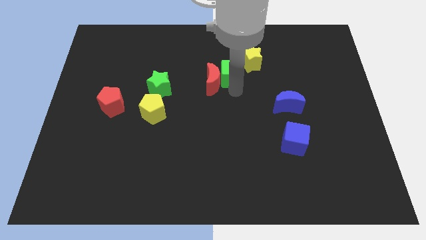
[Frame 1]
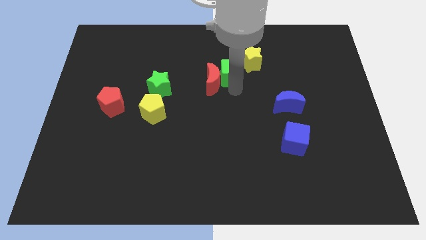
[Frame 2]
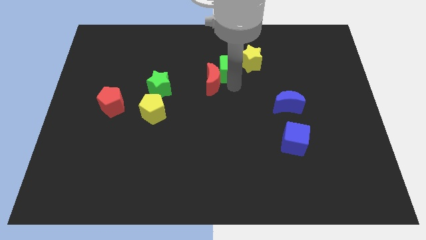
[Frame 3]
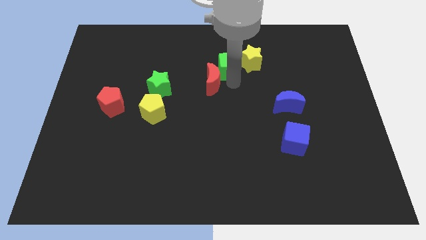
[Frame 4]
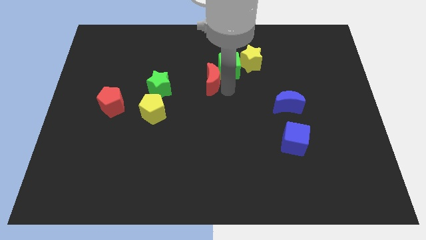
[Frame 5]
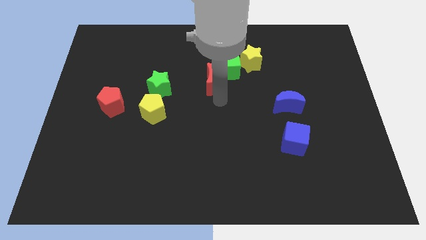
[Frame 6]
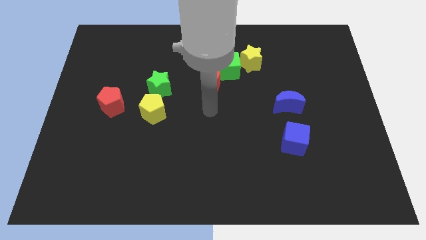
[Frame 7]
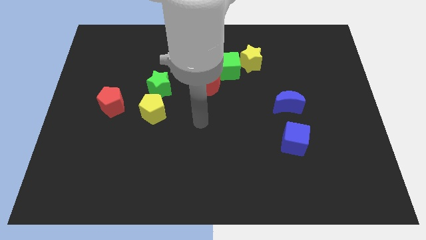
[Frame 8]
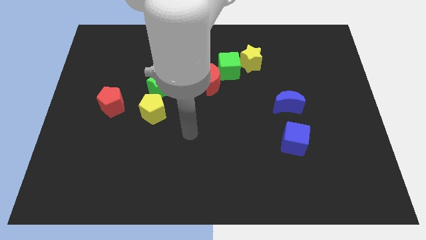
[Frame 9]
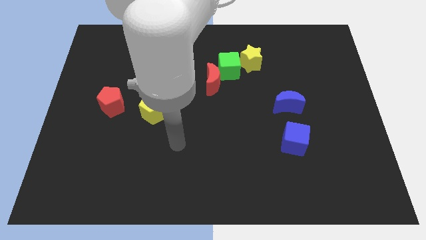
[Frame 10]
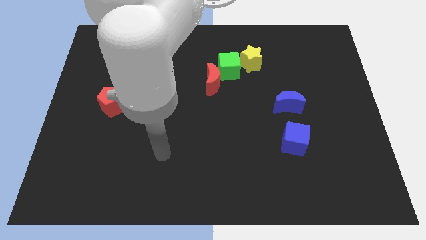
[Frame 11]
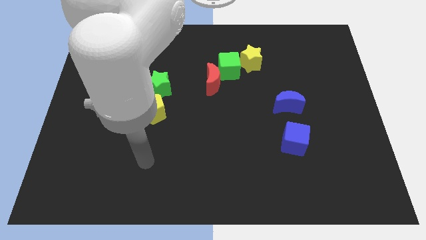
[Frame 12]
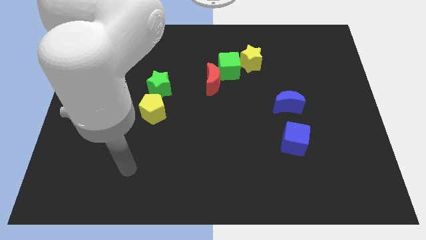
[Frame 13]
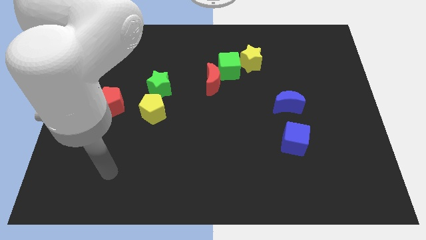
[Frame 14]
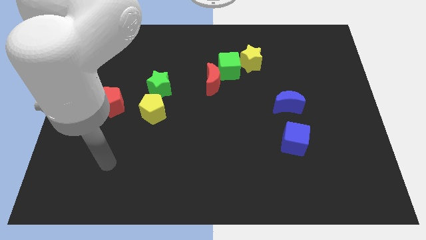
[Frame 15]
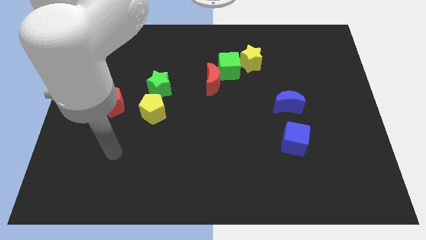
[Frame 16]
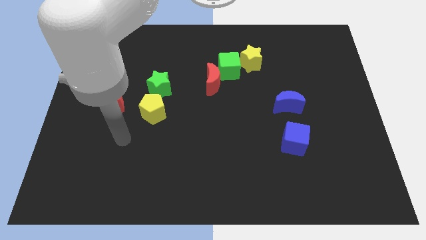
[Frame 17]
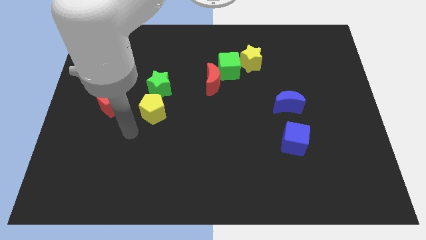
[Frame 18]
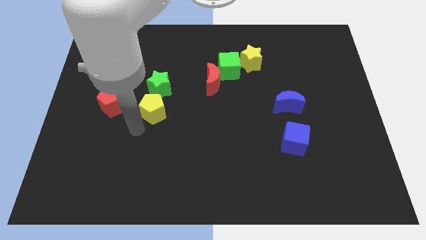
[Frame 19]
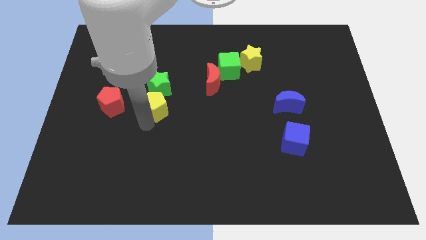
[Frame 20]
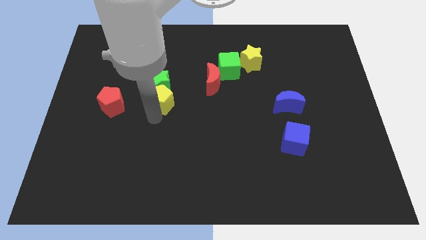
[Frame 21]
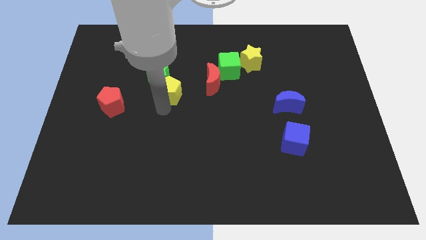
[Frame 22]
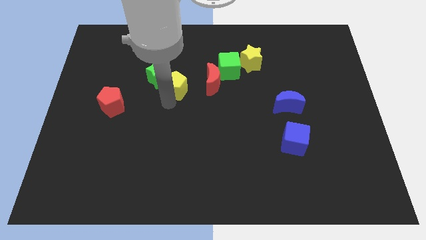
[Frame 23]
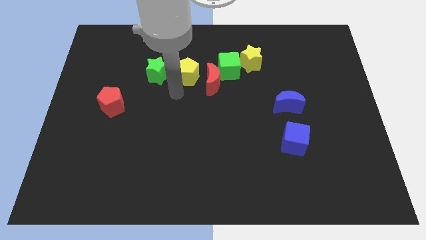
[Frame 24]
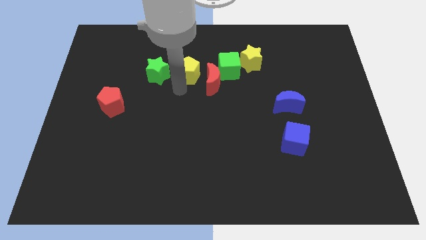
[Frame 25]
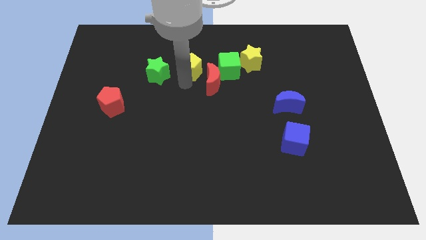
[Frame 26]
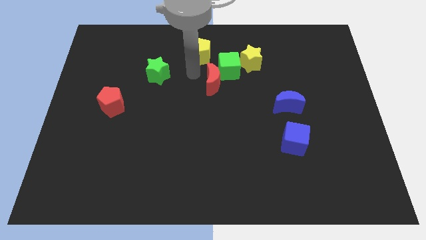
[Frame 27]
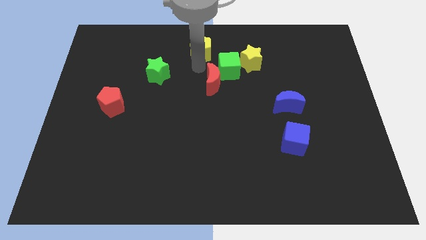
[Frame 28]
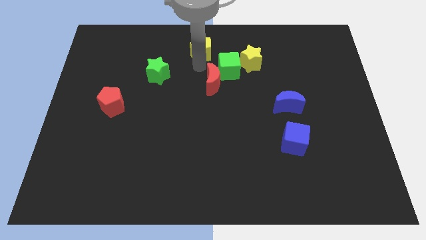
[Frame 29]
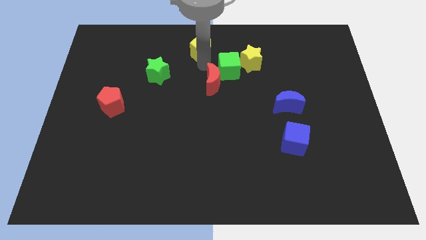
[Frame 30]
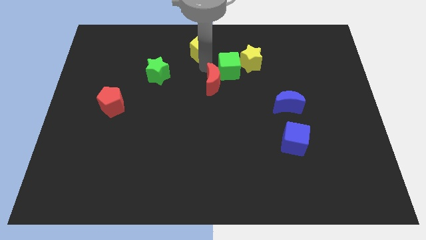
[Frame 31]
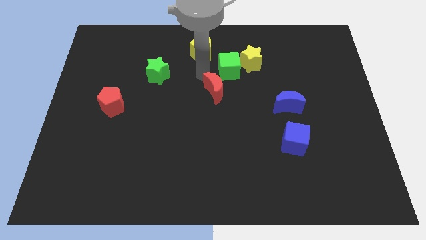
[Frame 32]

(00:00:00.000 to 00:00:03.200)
place the yellow pentagon above the red crescent

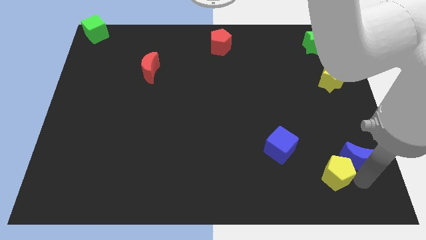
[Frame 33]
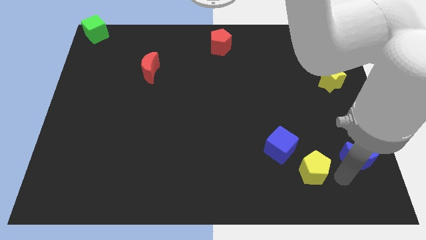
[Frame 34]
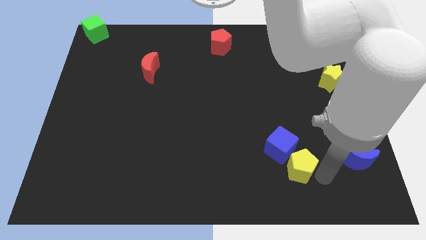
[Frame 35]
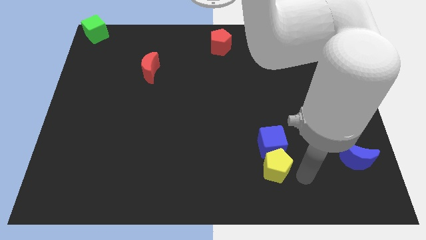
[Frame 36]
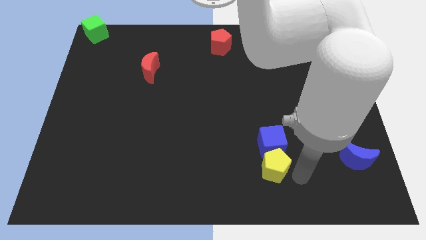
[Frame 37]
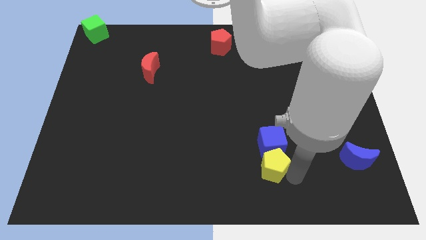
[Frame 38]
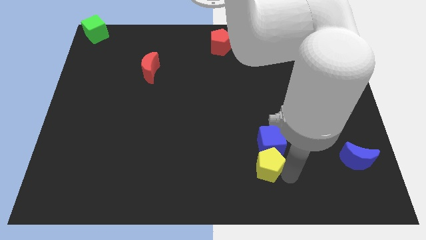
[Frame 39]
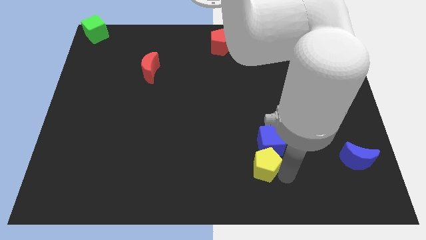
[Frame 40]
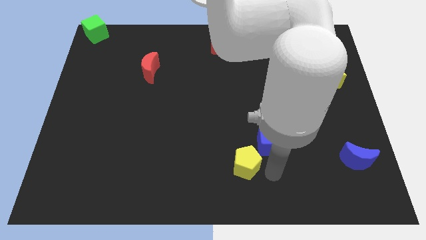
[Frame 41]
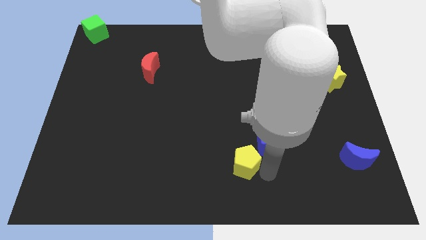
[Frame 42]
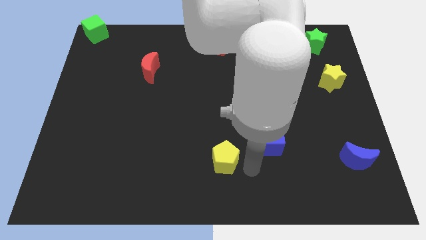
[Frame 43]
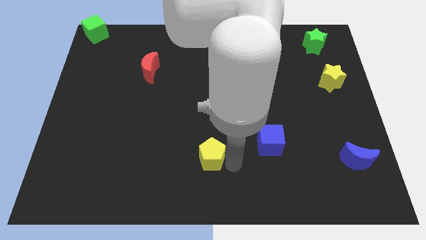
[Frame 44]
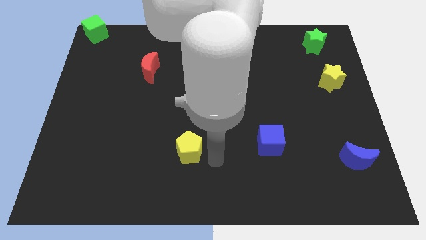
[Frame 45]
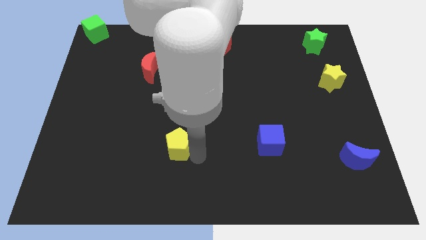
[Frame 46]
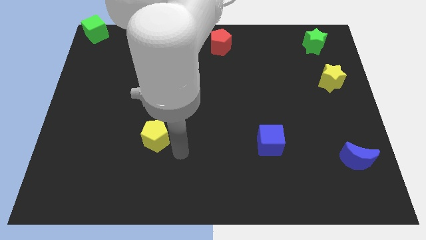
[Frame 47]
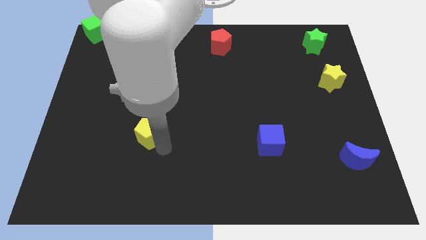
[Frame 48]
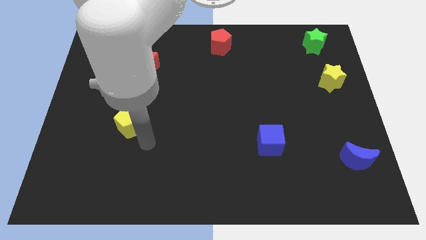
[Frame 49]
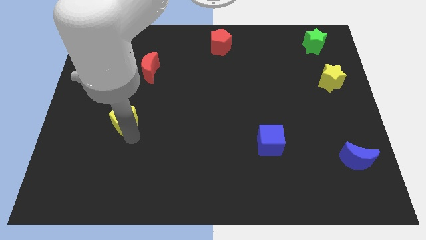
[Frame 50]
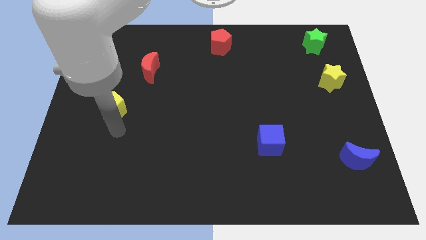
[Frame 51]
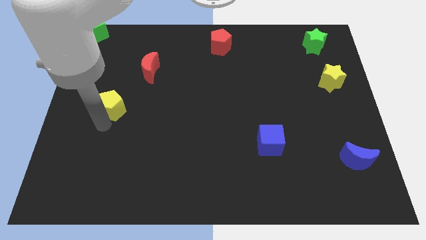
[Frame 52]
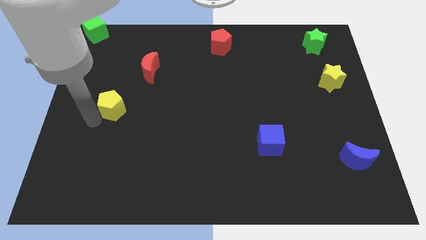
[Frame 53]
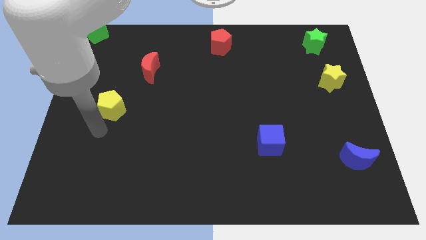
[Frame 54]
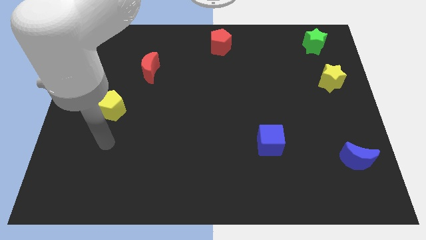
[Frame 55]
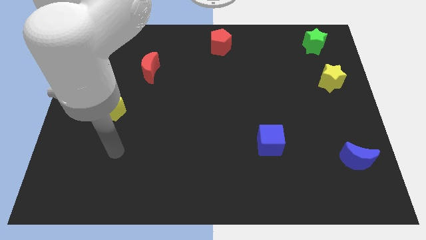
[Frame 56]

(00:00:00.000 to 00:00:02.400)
separate yellow pentagon from blue moon

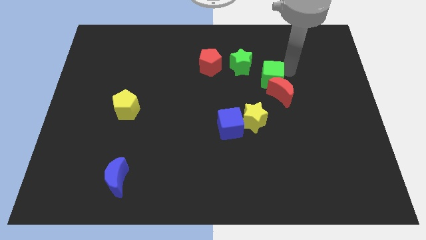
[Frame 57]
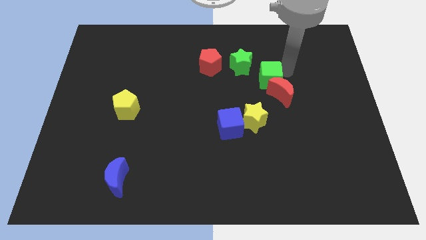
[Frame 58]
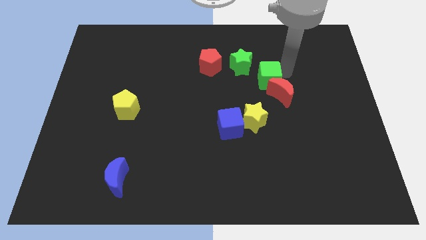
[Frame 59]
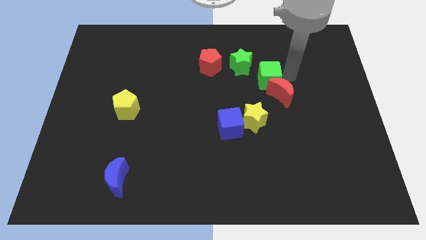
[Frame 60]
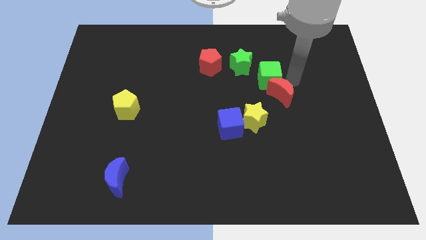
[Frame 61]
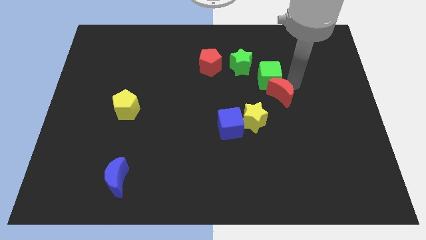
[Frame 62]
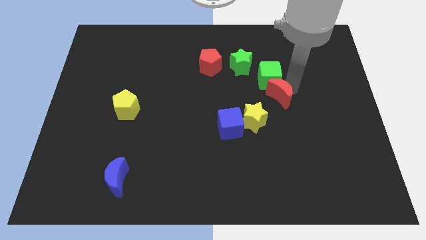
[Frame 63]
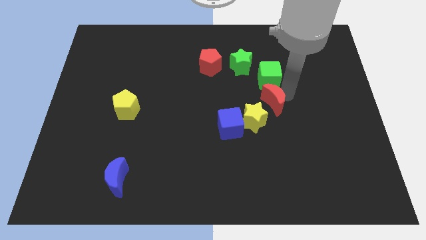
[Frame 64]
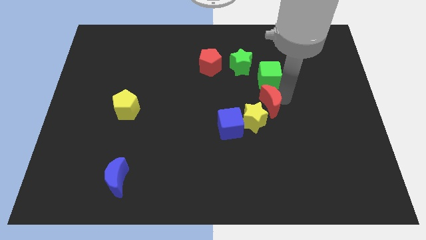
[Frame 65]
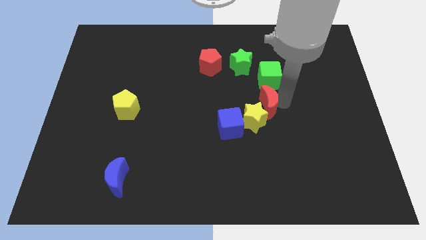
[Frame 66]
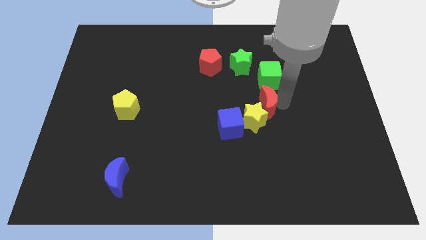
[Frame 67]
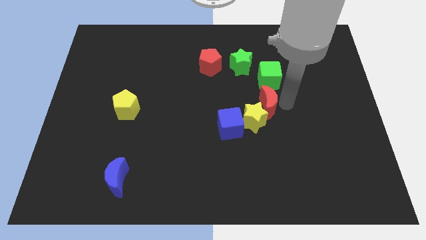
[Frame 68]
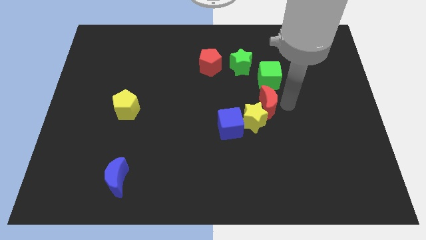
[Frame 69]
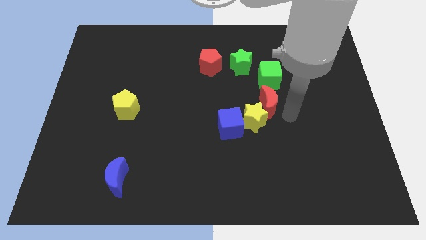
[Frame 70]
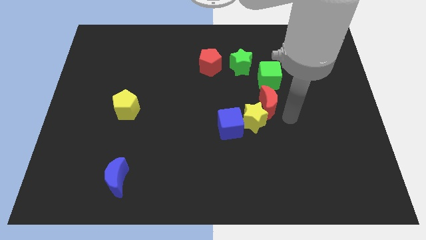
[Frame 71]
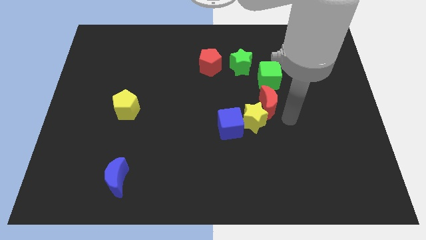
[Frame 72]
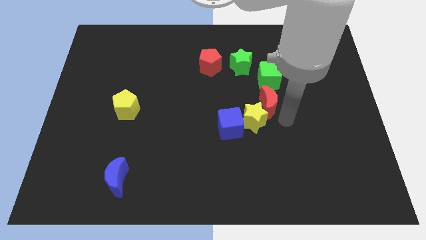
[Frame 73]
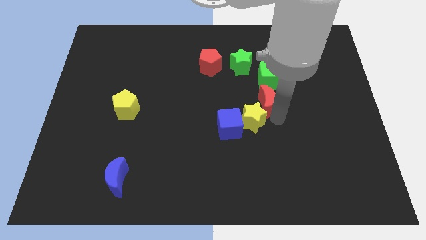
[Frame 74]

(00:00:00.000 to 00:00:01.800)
move the red moon close to the yellow star

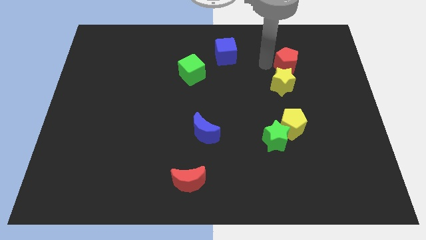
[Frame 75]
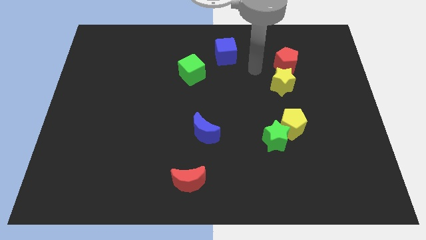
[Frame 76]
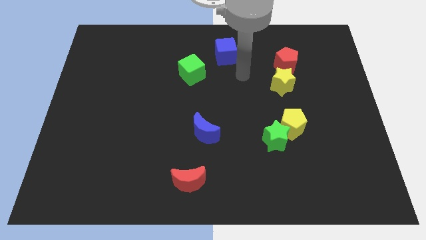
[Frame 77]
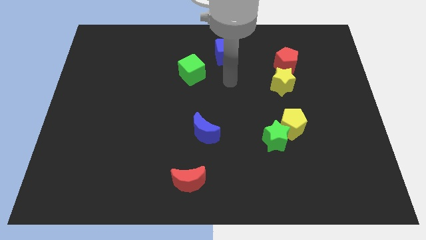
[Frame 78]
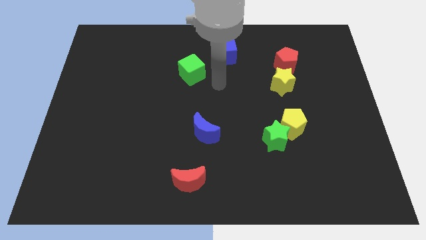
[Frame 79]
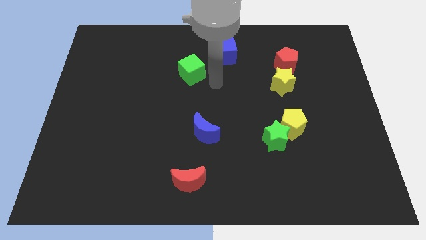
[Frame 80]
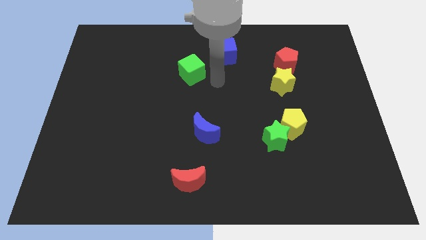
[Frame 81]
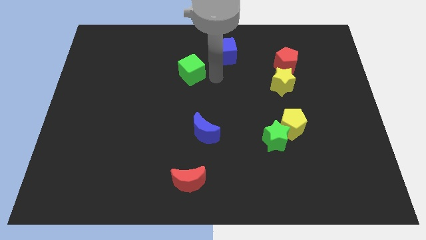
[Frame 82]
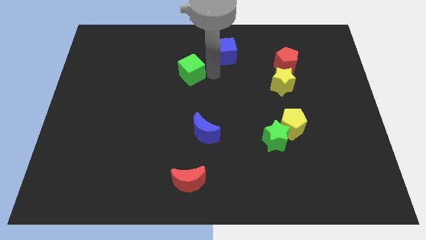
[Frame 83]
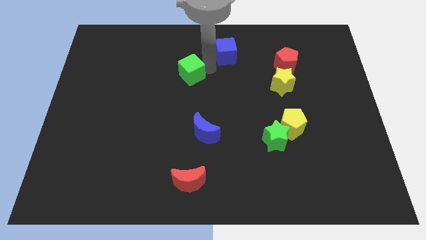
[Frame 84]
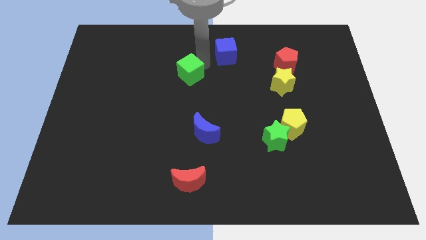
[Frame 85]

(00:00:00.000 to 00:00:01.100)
tap your arm on the top right side of green cube

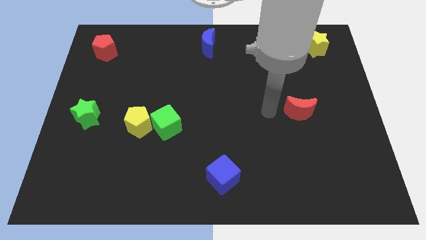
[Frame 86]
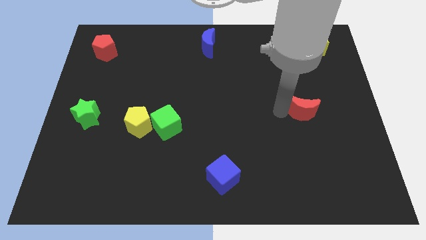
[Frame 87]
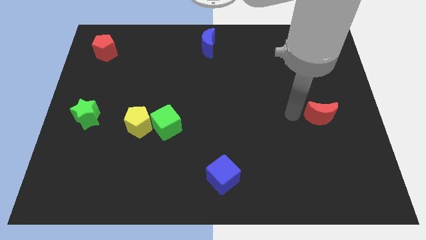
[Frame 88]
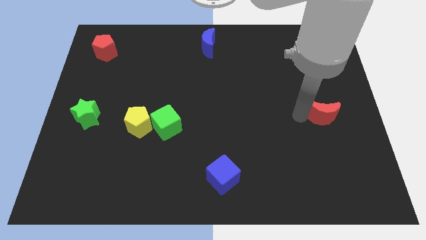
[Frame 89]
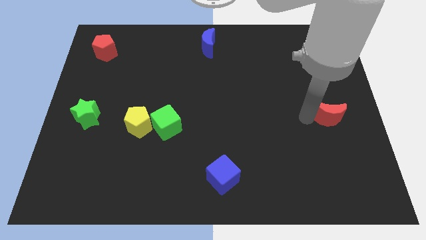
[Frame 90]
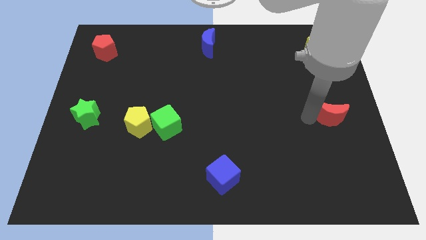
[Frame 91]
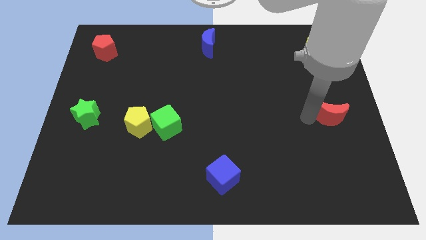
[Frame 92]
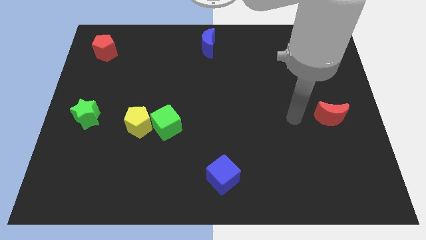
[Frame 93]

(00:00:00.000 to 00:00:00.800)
place red crescent on the right center of the board
